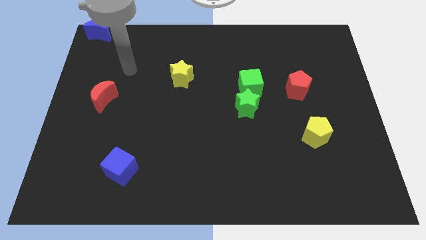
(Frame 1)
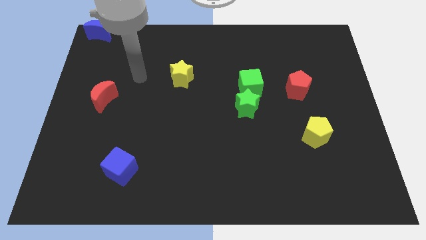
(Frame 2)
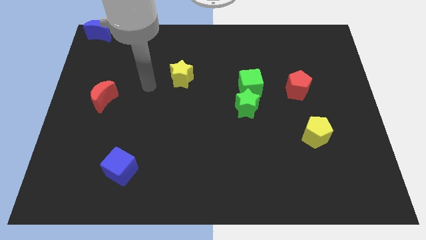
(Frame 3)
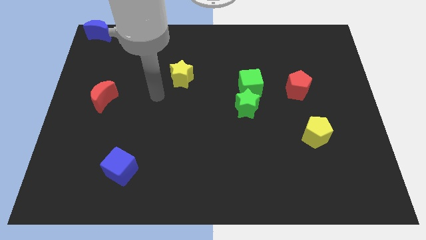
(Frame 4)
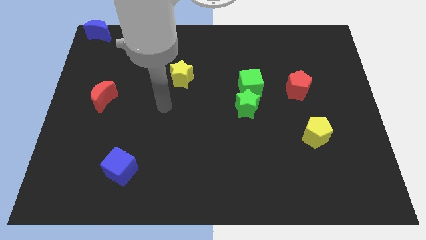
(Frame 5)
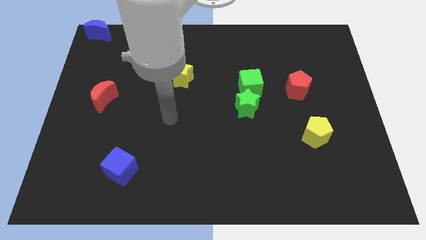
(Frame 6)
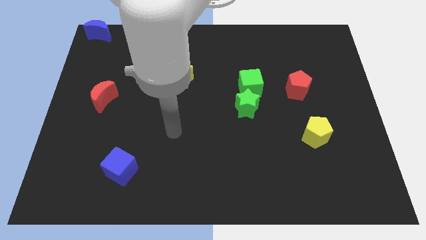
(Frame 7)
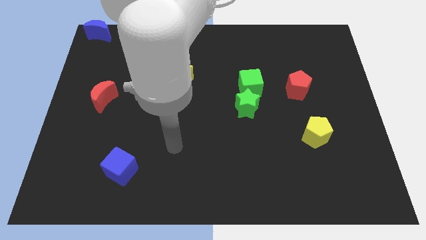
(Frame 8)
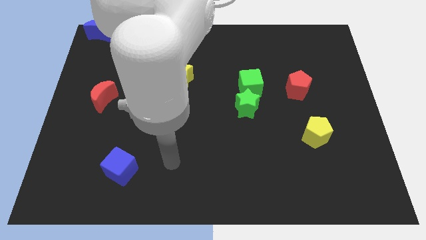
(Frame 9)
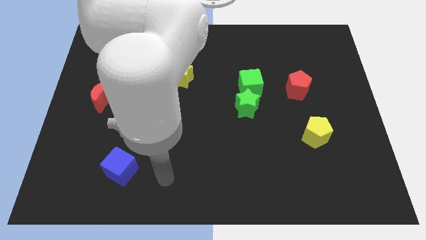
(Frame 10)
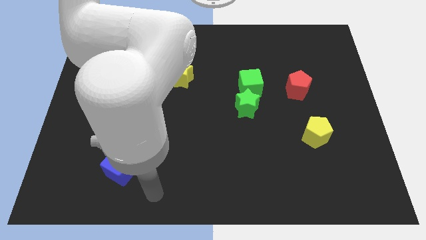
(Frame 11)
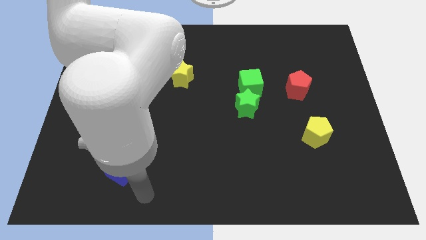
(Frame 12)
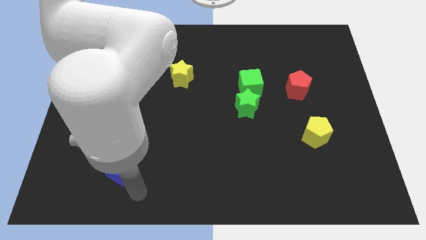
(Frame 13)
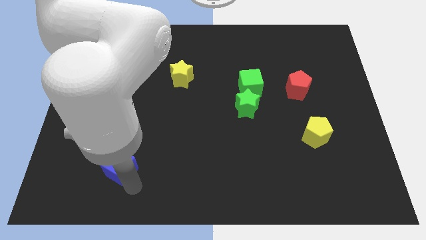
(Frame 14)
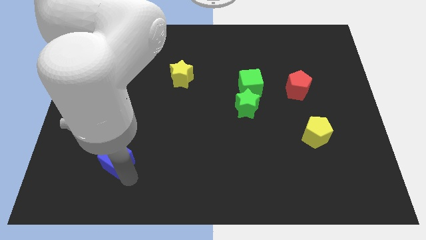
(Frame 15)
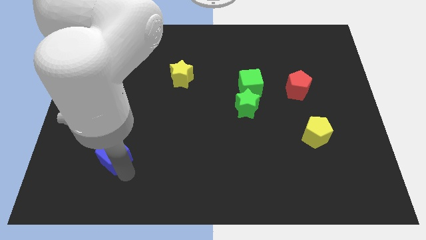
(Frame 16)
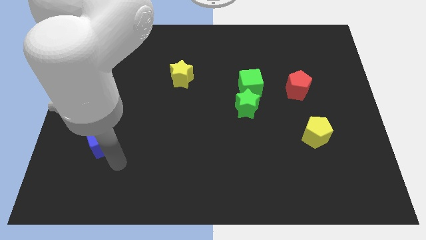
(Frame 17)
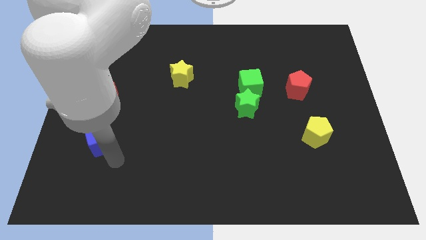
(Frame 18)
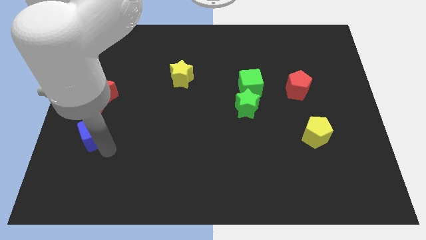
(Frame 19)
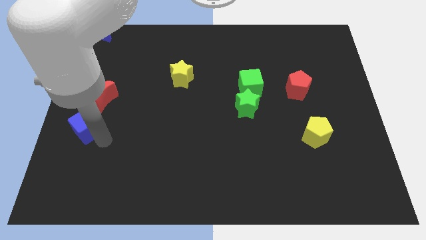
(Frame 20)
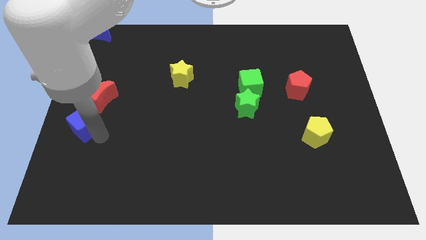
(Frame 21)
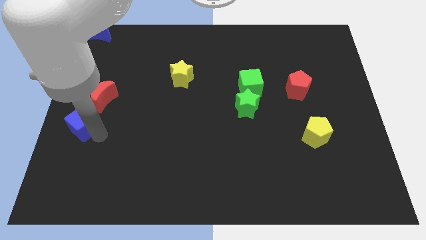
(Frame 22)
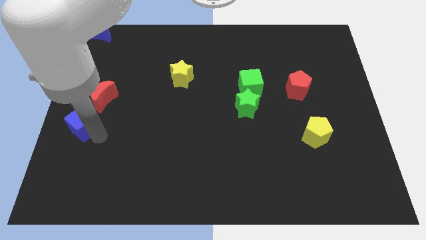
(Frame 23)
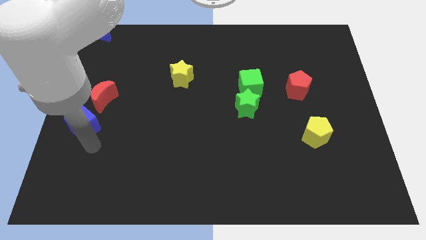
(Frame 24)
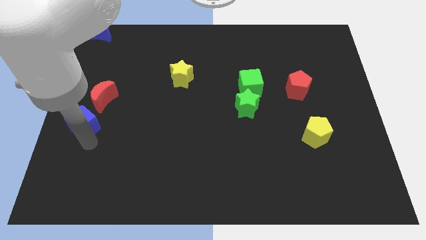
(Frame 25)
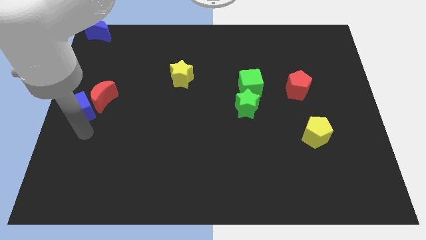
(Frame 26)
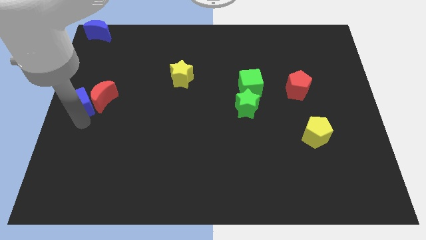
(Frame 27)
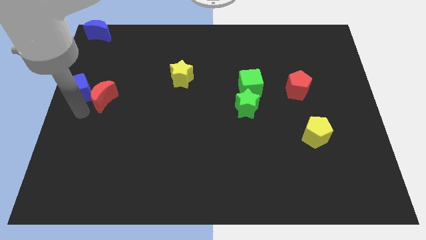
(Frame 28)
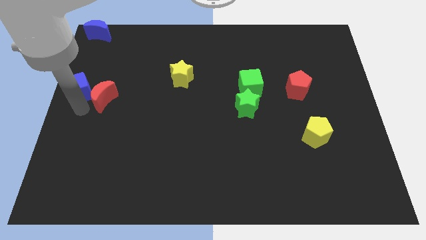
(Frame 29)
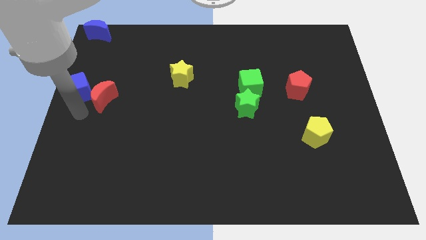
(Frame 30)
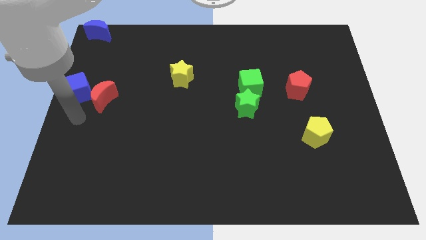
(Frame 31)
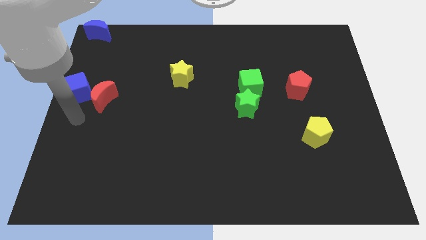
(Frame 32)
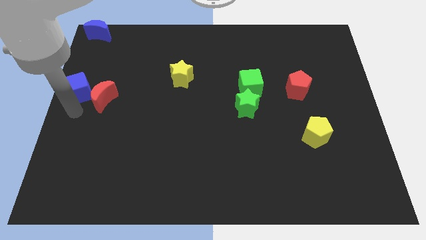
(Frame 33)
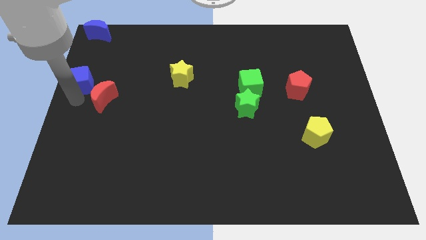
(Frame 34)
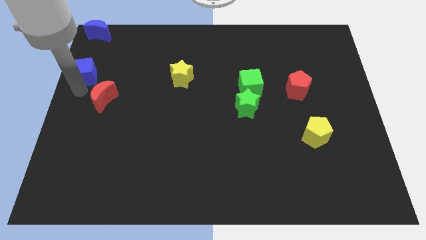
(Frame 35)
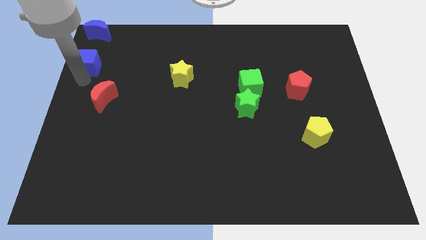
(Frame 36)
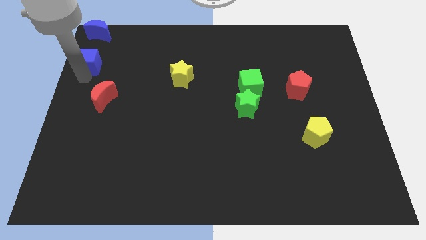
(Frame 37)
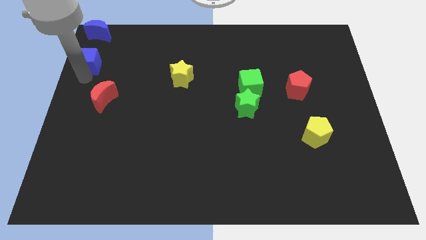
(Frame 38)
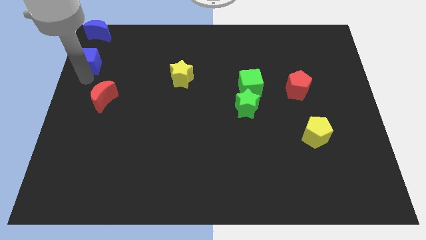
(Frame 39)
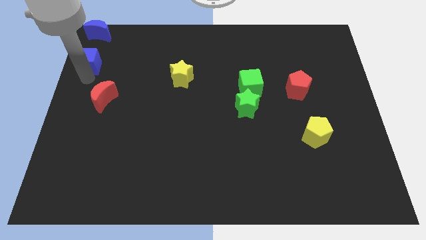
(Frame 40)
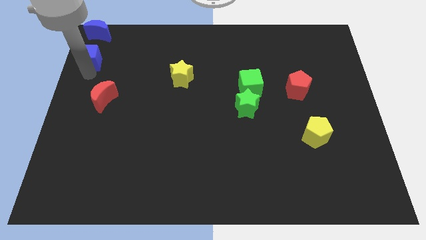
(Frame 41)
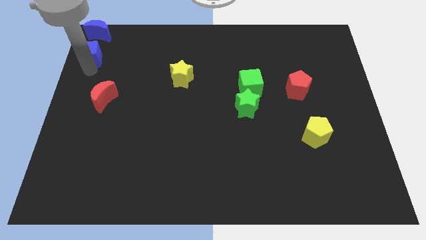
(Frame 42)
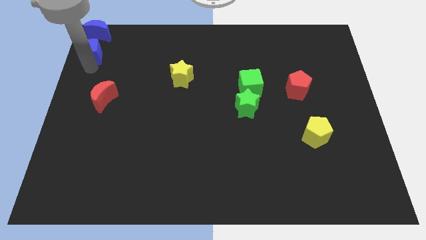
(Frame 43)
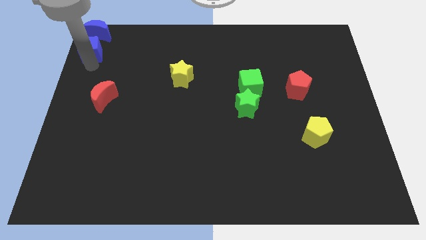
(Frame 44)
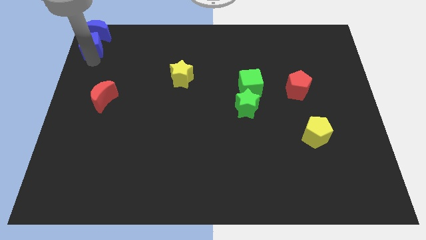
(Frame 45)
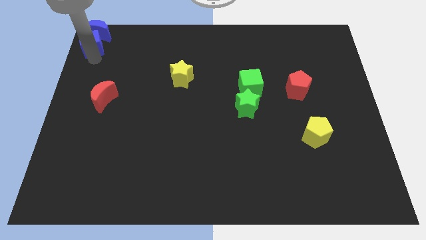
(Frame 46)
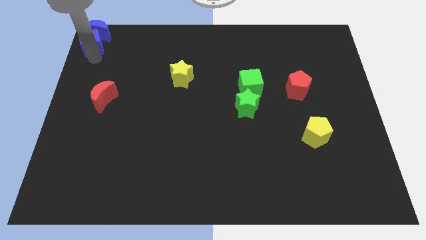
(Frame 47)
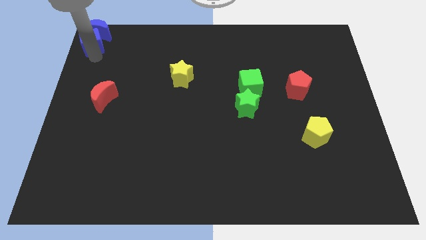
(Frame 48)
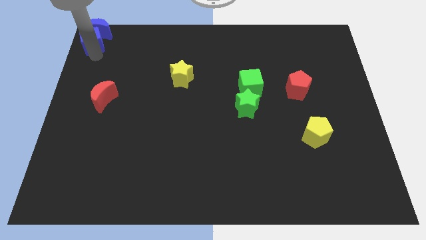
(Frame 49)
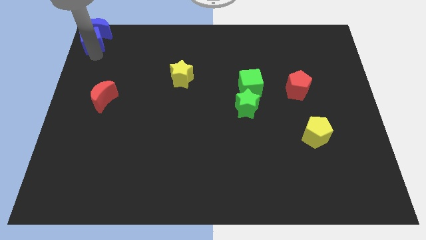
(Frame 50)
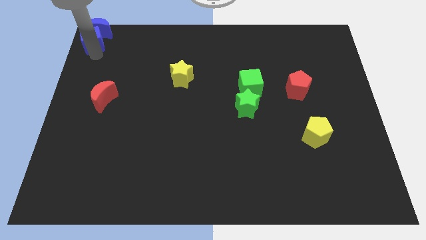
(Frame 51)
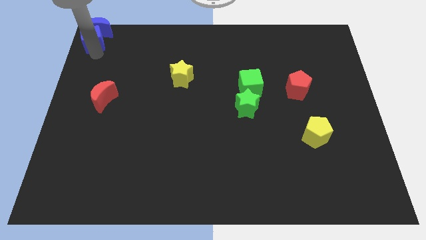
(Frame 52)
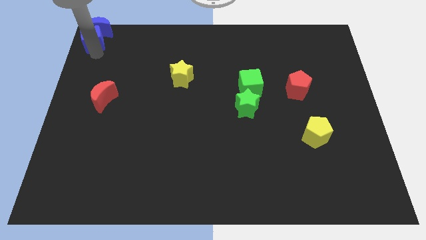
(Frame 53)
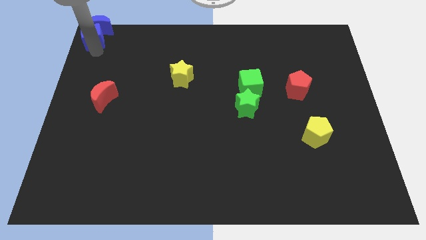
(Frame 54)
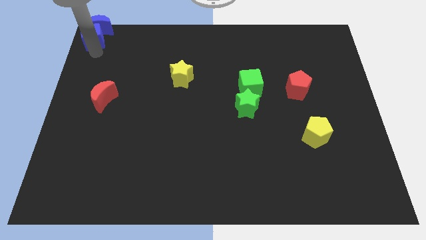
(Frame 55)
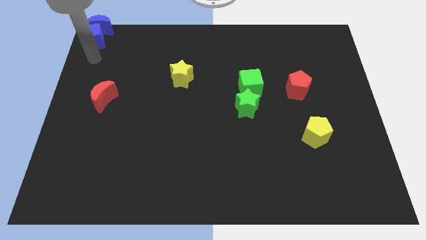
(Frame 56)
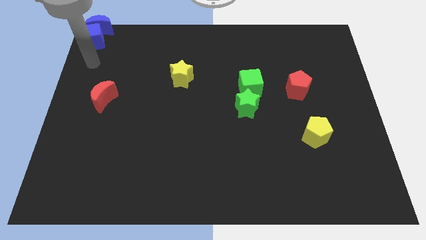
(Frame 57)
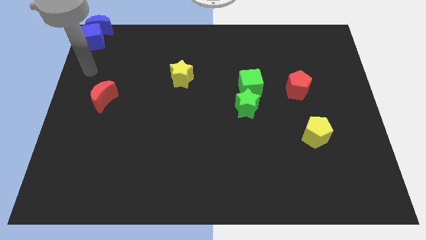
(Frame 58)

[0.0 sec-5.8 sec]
push the blue cube towards the blue crescent

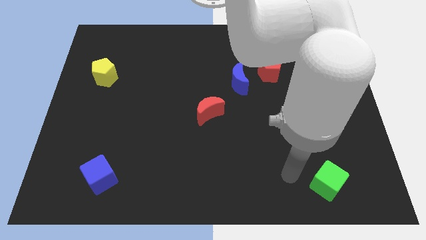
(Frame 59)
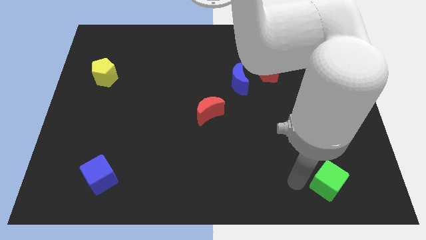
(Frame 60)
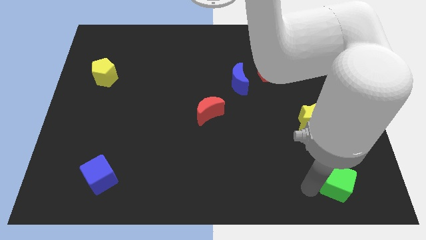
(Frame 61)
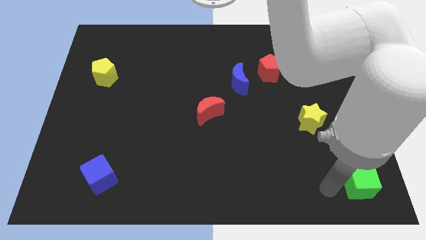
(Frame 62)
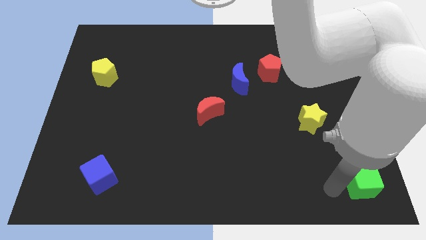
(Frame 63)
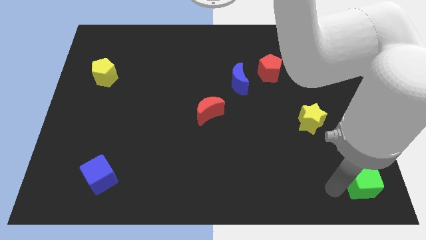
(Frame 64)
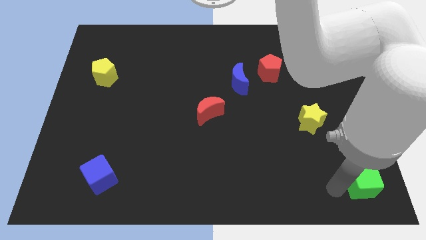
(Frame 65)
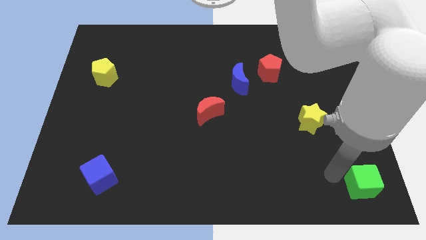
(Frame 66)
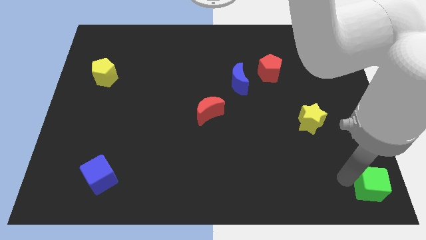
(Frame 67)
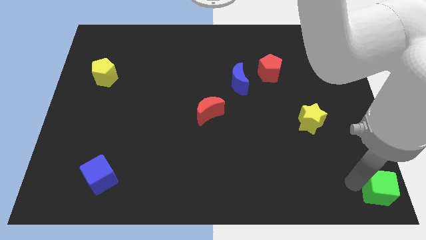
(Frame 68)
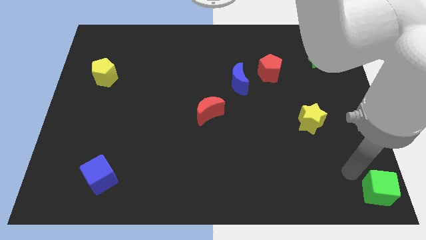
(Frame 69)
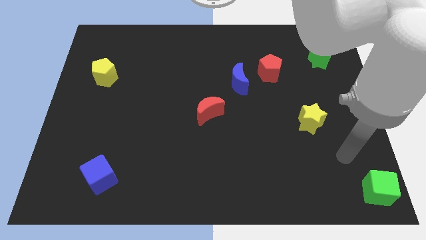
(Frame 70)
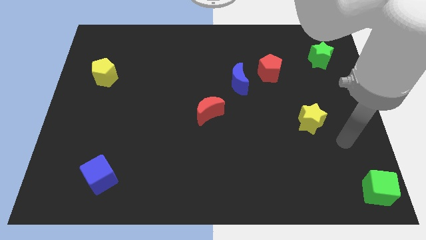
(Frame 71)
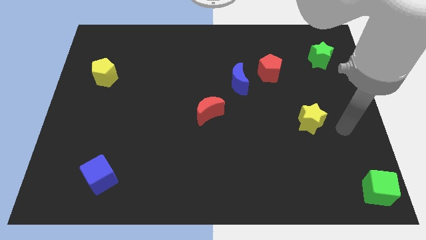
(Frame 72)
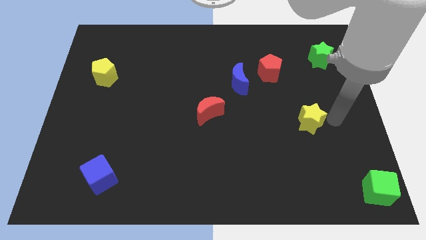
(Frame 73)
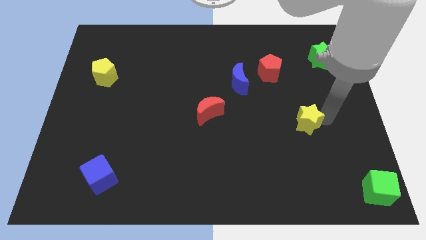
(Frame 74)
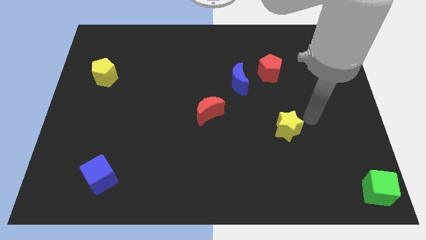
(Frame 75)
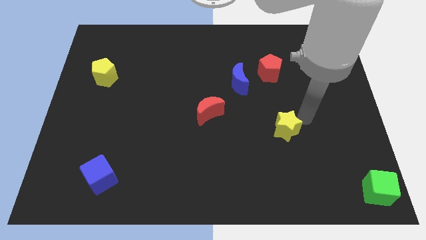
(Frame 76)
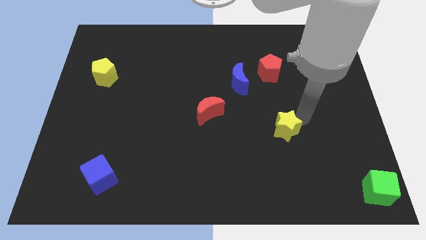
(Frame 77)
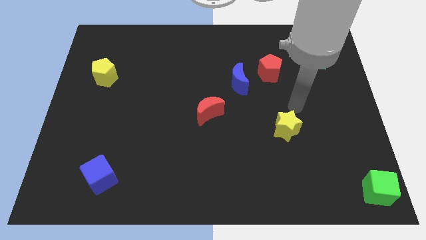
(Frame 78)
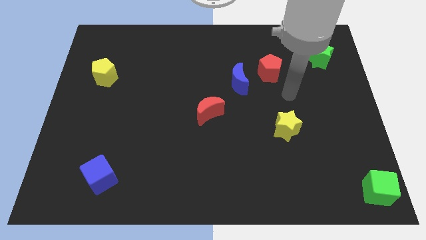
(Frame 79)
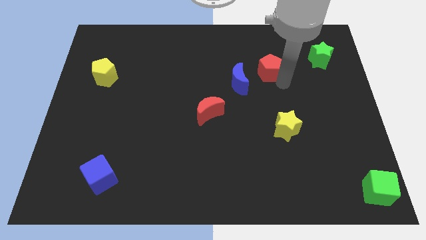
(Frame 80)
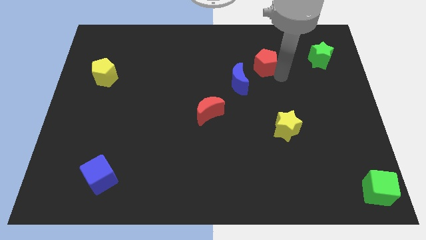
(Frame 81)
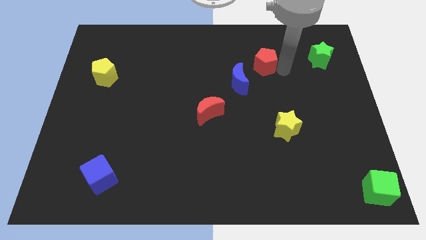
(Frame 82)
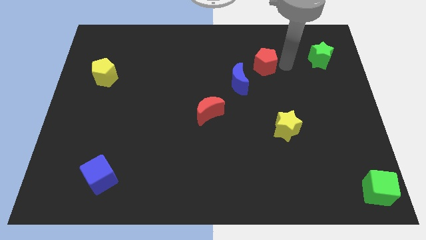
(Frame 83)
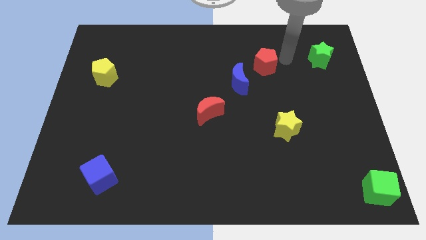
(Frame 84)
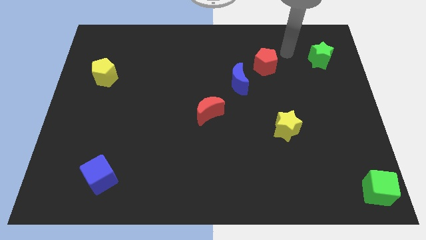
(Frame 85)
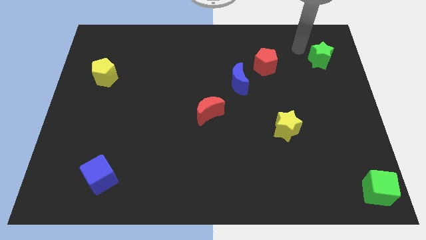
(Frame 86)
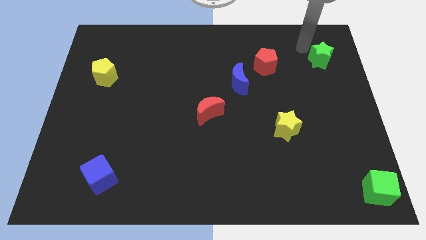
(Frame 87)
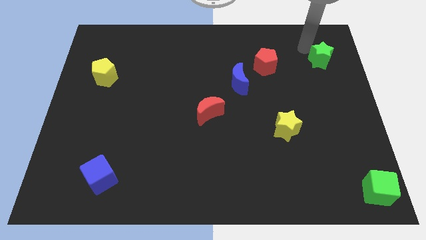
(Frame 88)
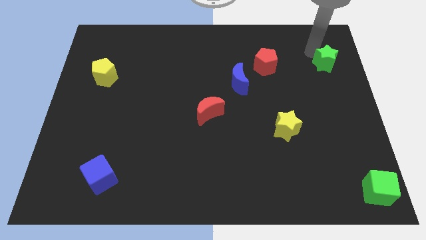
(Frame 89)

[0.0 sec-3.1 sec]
place the yellow star diagonally bottom right to the blue moon

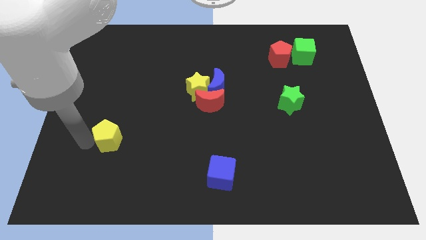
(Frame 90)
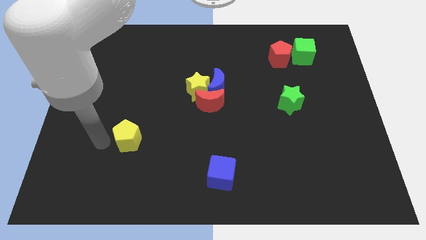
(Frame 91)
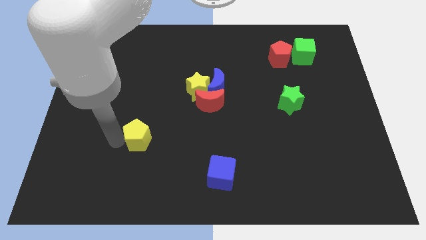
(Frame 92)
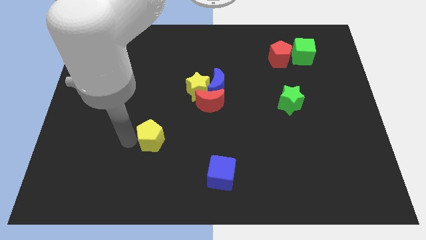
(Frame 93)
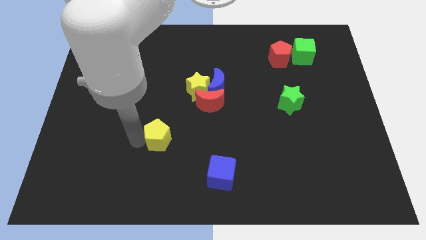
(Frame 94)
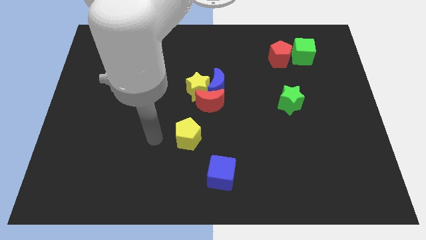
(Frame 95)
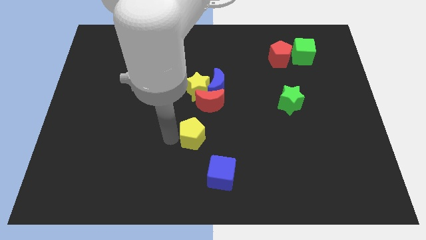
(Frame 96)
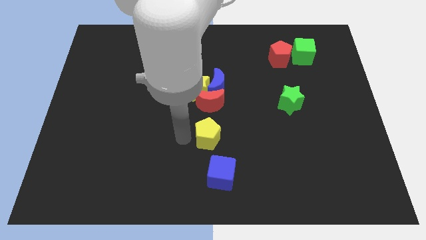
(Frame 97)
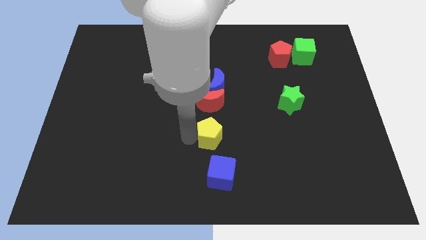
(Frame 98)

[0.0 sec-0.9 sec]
drag the yellow pentagon to the right
